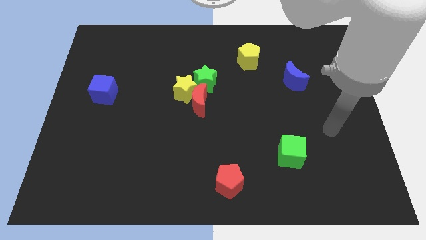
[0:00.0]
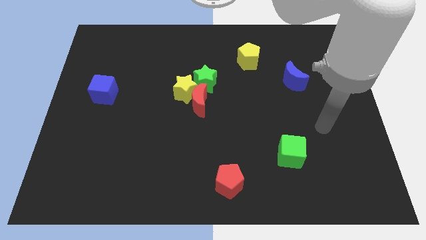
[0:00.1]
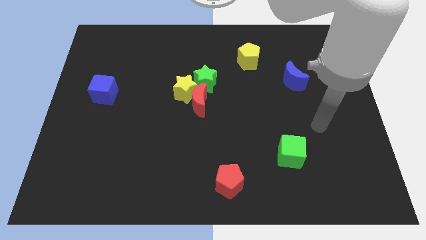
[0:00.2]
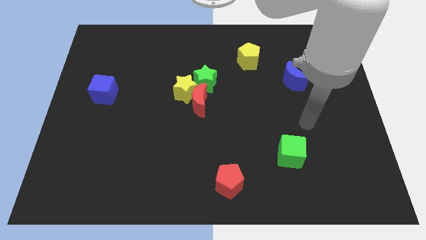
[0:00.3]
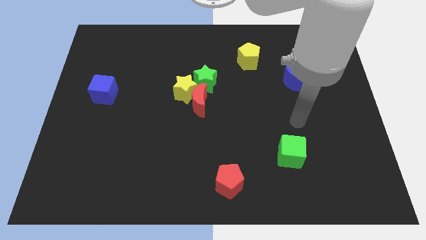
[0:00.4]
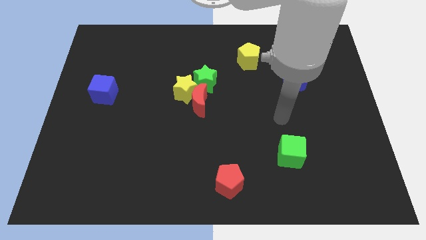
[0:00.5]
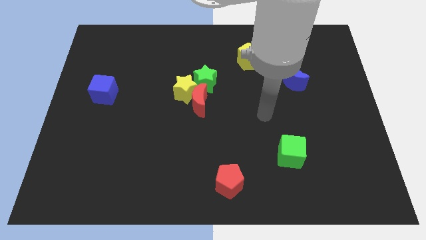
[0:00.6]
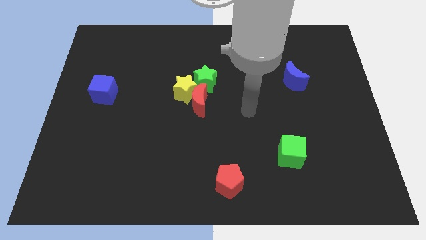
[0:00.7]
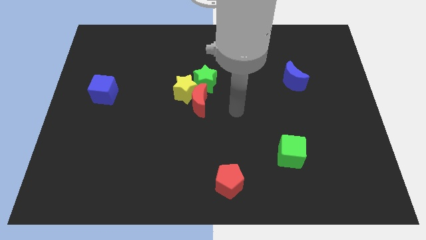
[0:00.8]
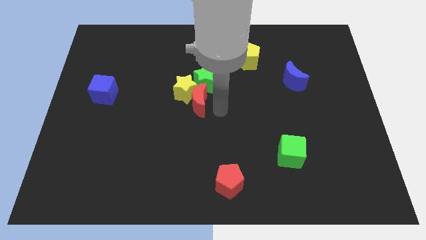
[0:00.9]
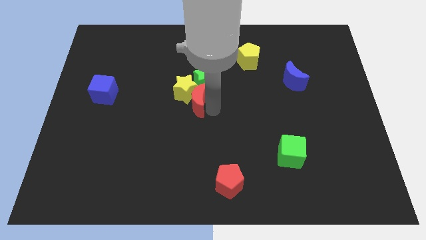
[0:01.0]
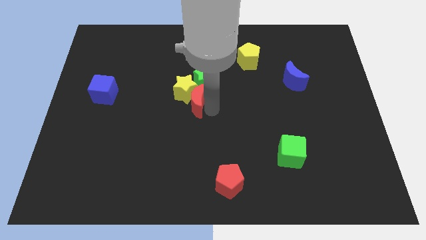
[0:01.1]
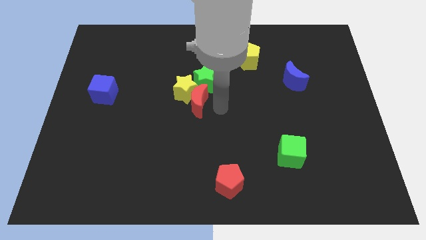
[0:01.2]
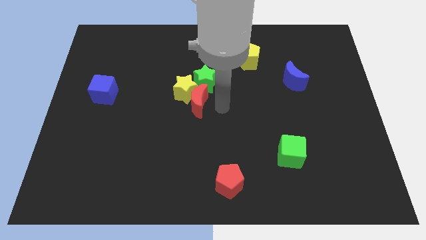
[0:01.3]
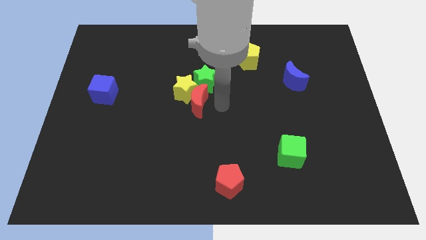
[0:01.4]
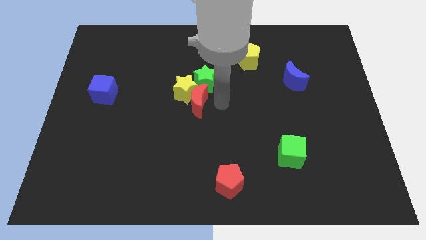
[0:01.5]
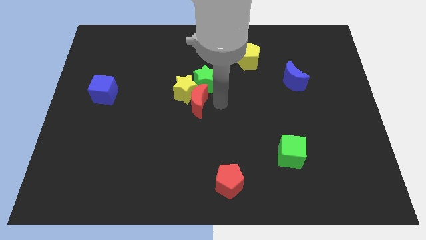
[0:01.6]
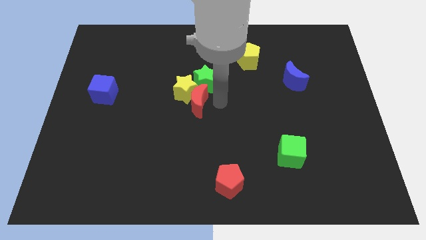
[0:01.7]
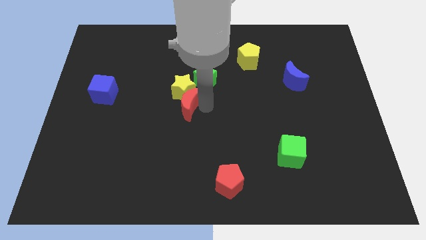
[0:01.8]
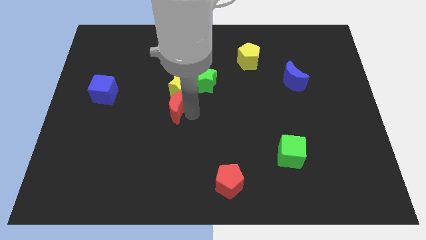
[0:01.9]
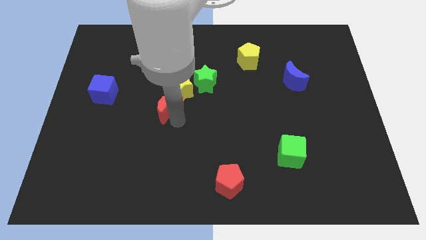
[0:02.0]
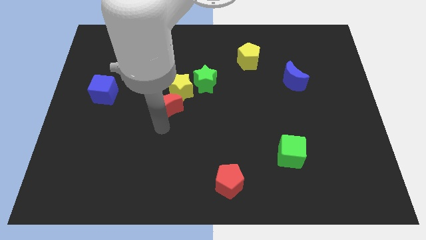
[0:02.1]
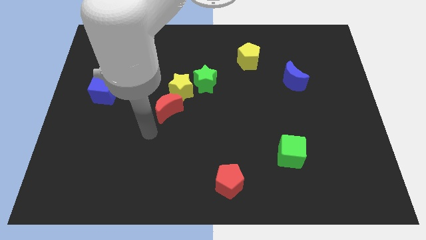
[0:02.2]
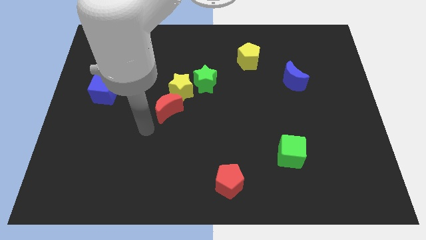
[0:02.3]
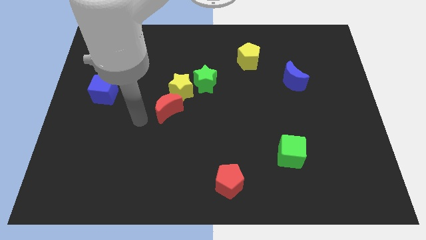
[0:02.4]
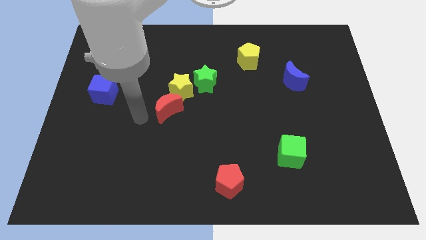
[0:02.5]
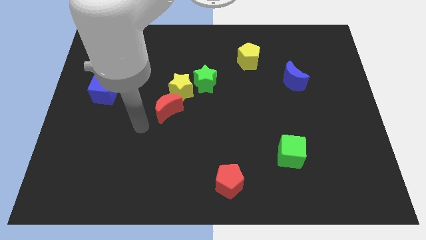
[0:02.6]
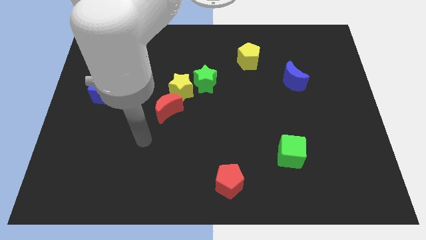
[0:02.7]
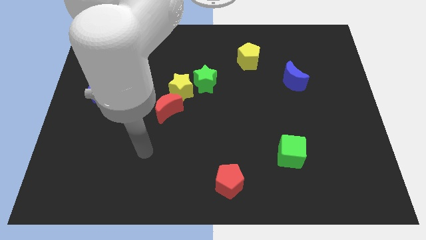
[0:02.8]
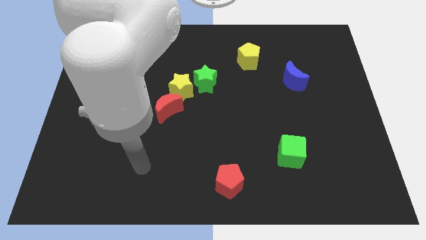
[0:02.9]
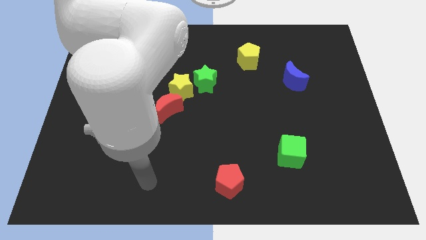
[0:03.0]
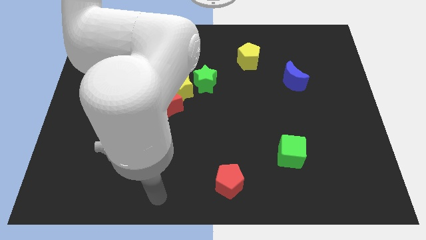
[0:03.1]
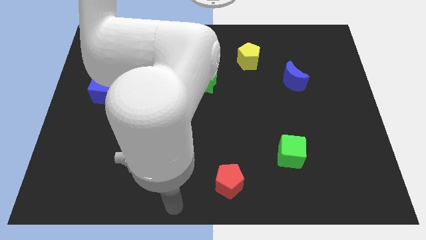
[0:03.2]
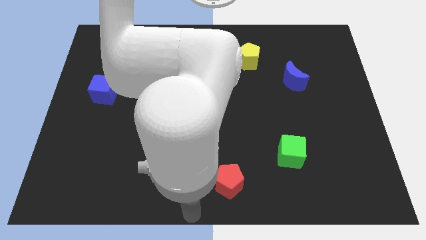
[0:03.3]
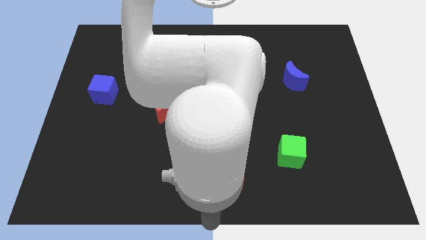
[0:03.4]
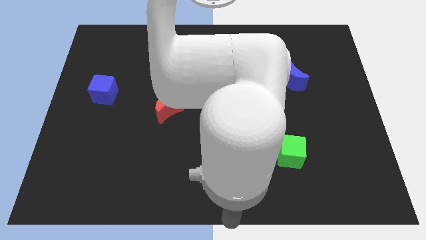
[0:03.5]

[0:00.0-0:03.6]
move your arm to the bottom center

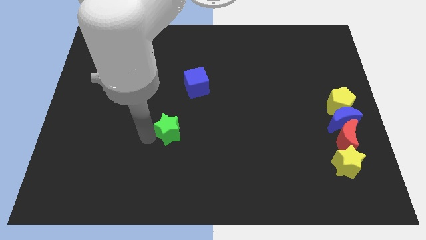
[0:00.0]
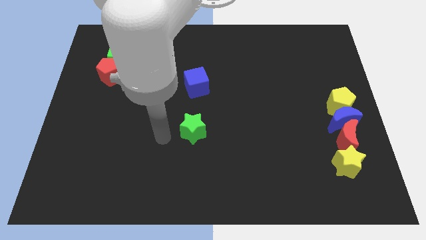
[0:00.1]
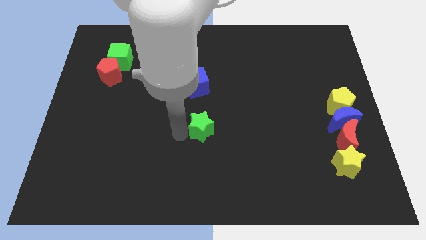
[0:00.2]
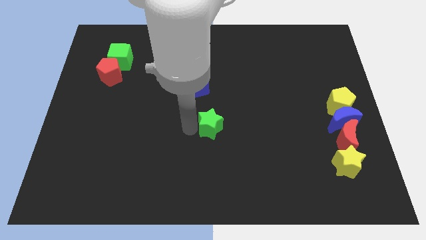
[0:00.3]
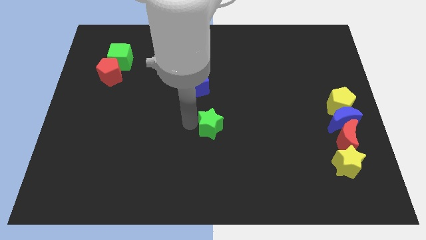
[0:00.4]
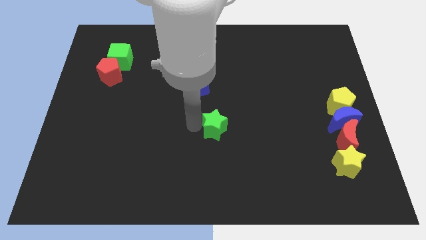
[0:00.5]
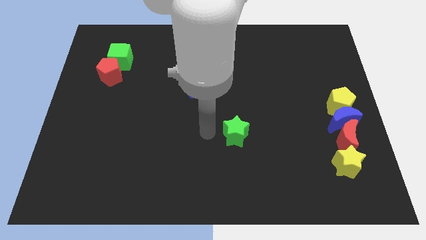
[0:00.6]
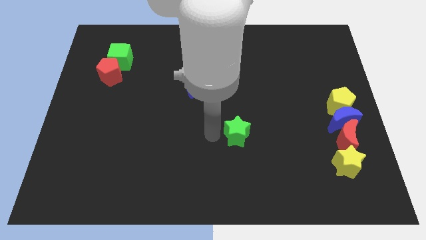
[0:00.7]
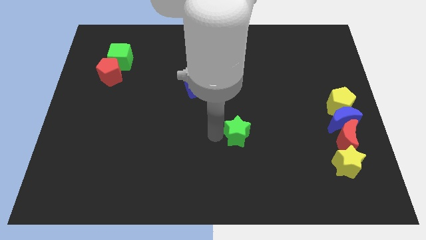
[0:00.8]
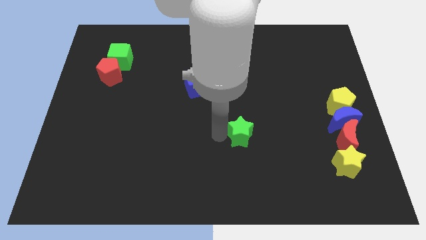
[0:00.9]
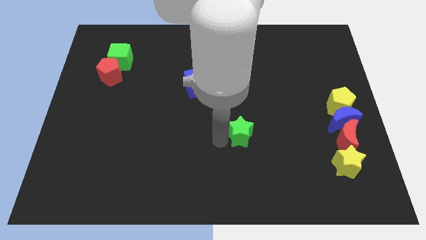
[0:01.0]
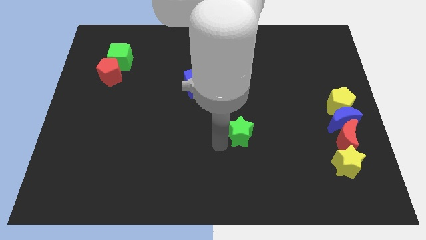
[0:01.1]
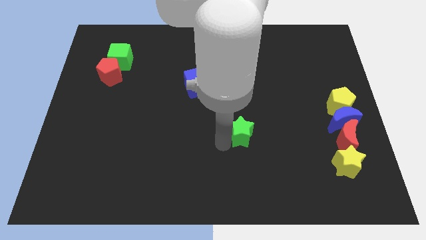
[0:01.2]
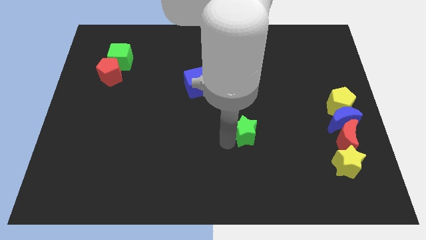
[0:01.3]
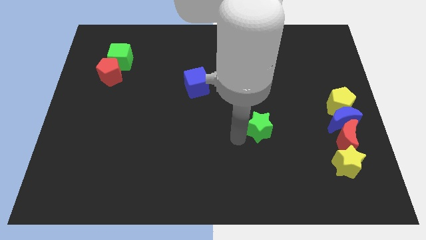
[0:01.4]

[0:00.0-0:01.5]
push green star slightly to the right

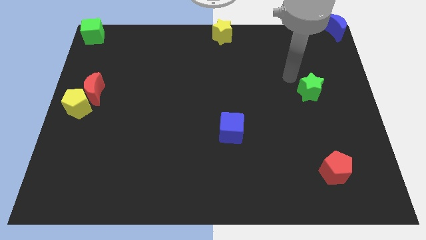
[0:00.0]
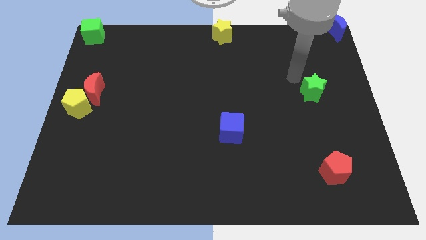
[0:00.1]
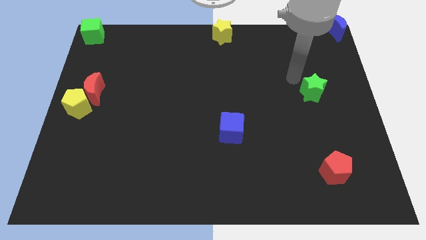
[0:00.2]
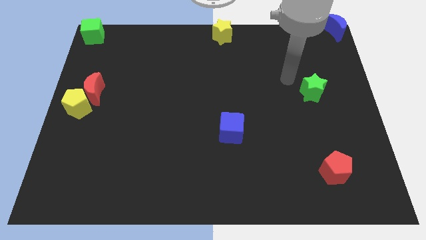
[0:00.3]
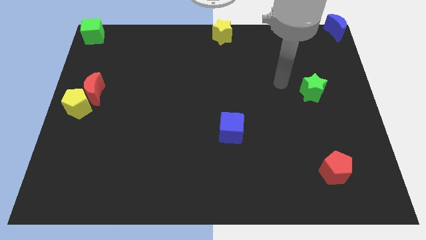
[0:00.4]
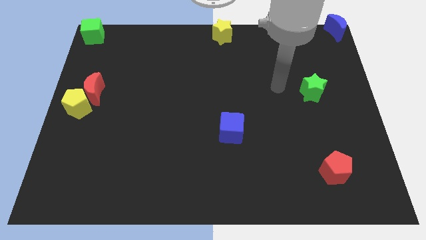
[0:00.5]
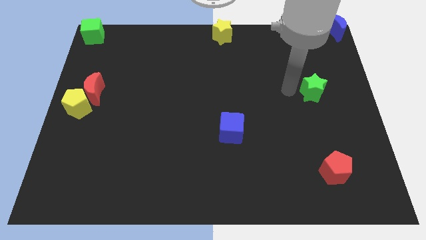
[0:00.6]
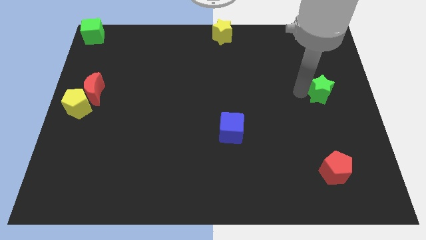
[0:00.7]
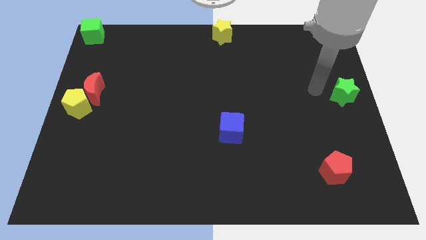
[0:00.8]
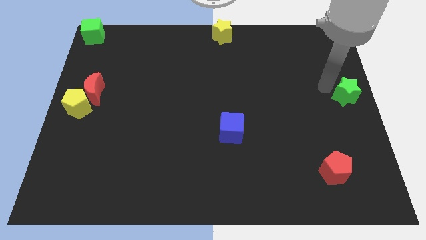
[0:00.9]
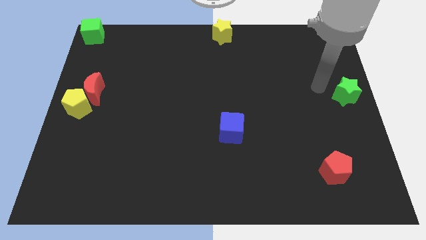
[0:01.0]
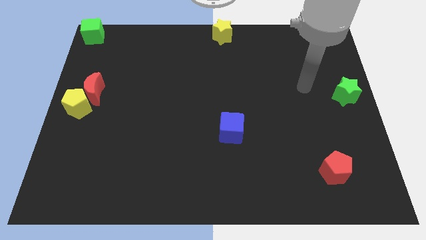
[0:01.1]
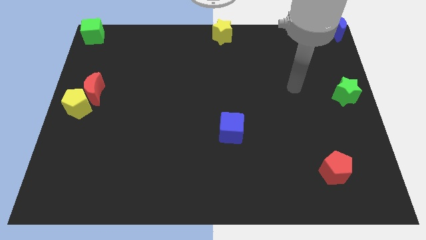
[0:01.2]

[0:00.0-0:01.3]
push the green star to the right center of the board

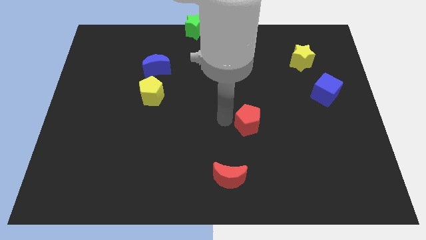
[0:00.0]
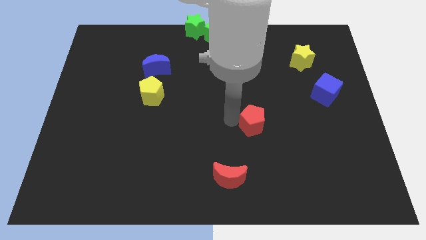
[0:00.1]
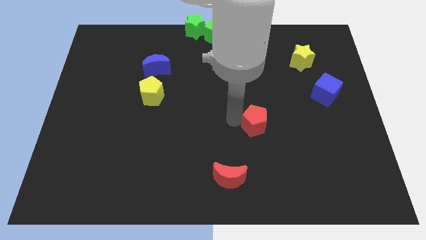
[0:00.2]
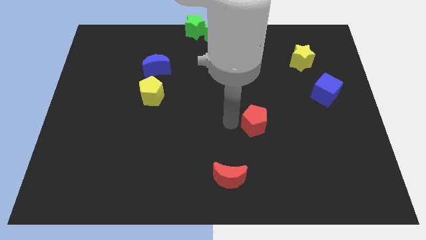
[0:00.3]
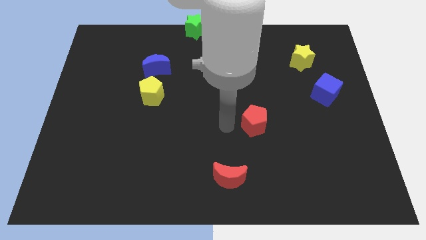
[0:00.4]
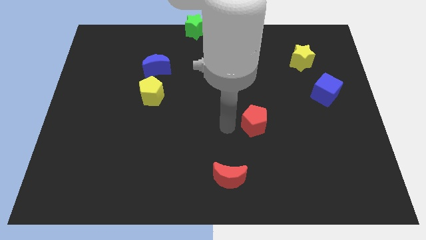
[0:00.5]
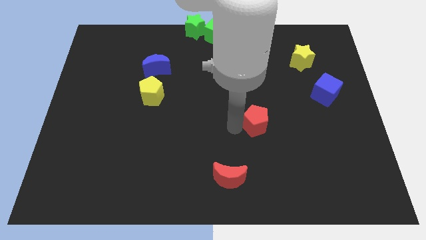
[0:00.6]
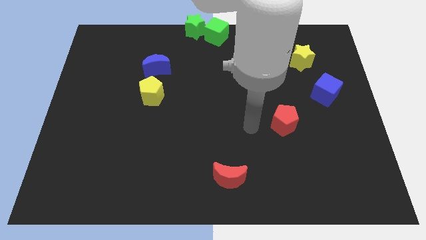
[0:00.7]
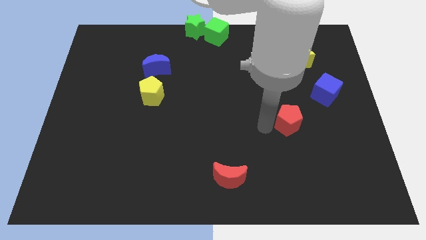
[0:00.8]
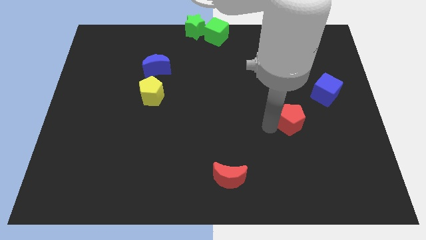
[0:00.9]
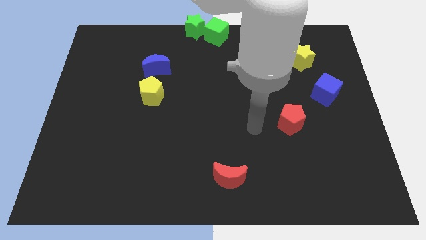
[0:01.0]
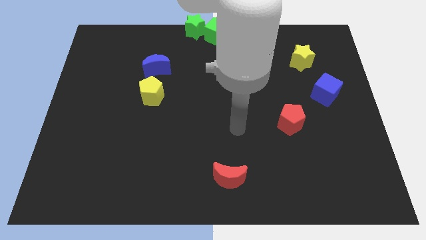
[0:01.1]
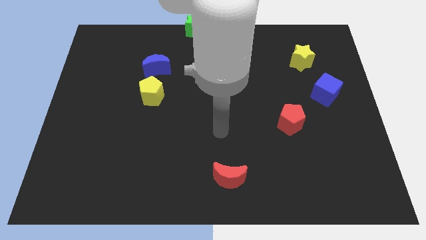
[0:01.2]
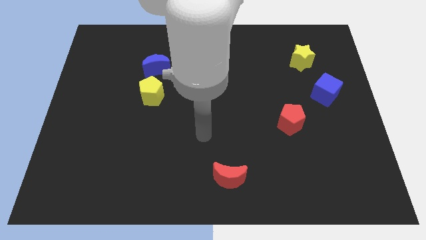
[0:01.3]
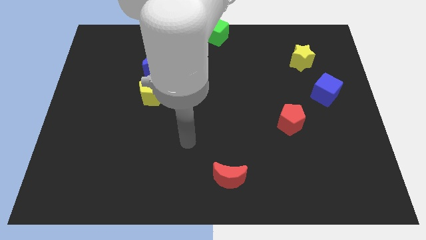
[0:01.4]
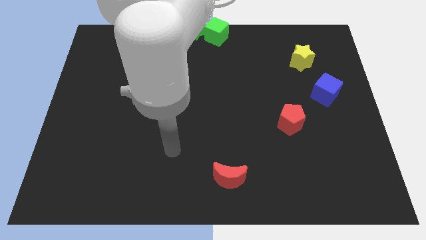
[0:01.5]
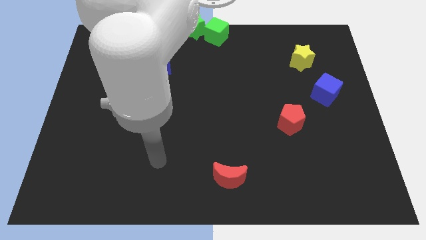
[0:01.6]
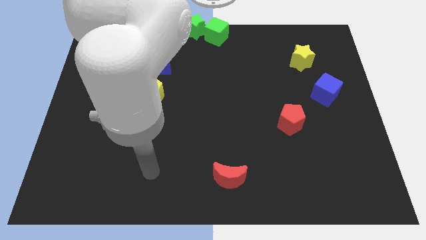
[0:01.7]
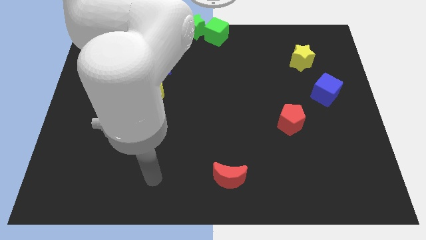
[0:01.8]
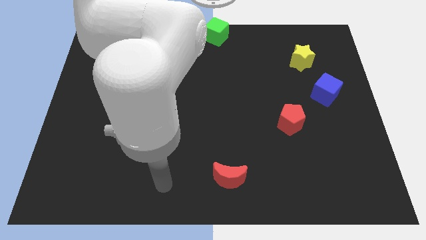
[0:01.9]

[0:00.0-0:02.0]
put the red pentagon between the blue cube and red moon

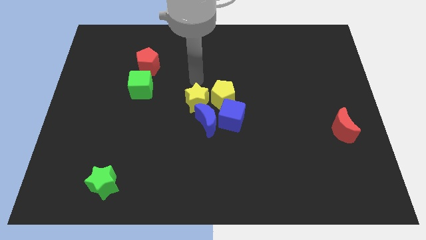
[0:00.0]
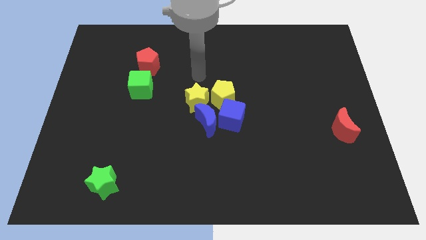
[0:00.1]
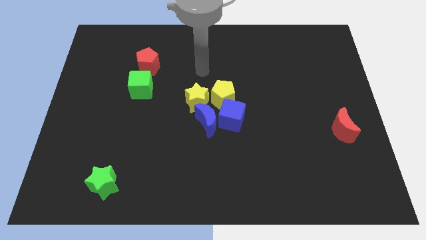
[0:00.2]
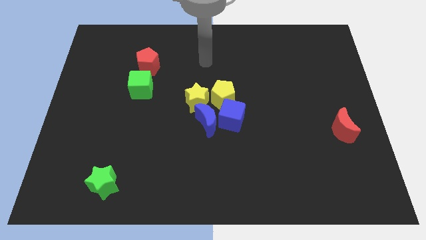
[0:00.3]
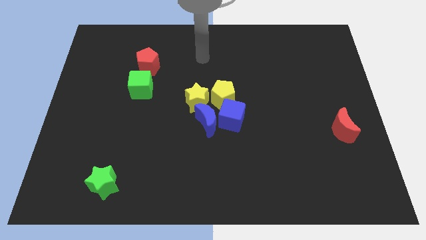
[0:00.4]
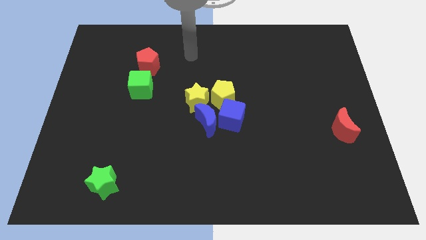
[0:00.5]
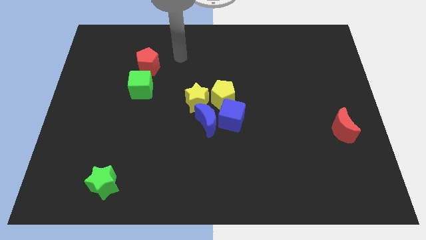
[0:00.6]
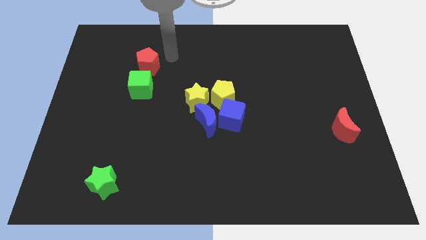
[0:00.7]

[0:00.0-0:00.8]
point your arm at the top right side of red pentagon
